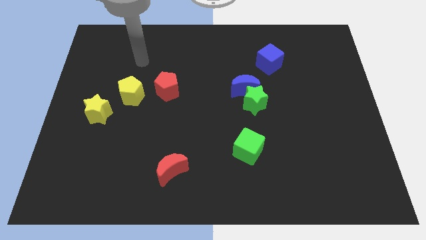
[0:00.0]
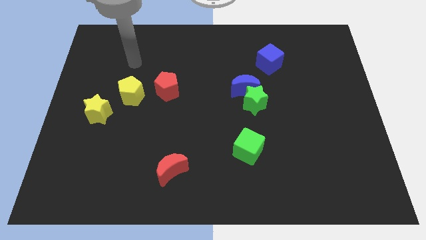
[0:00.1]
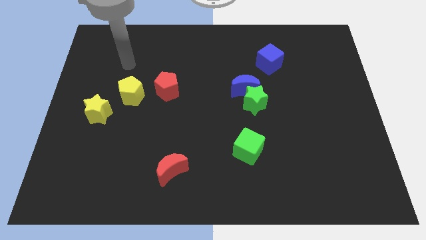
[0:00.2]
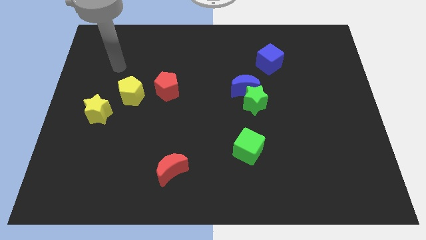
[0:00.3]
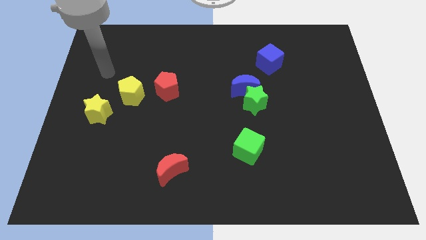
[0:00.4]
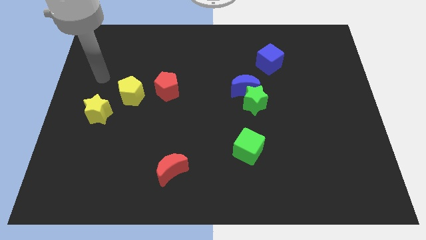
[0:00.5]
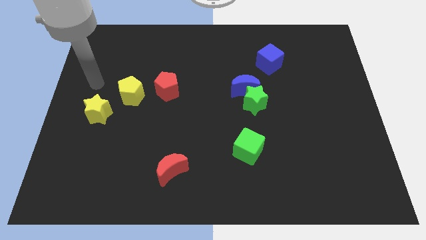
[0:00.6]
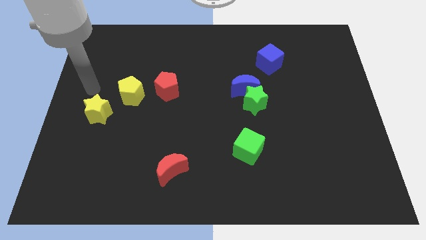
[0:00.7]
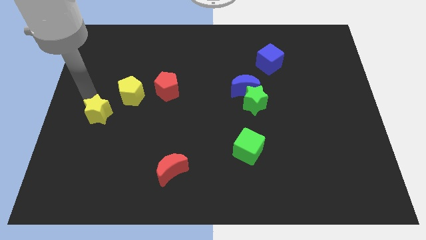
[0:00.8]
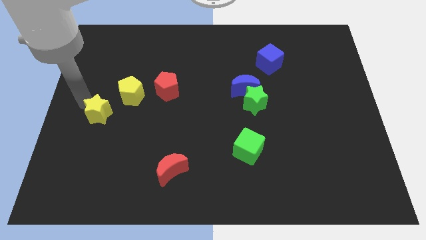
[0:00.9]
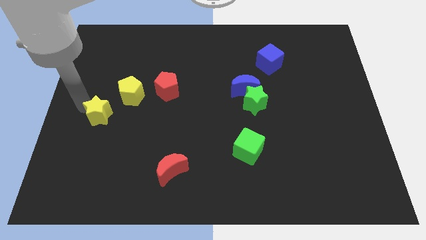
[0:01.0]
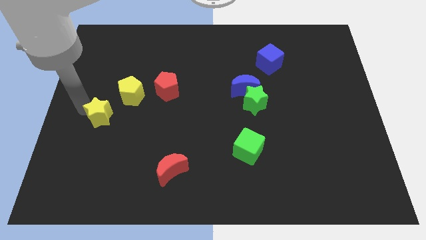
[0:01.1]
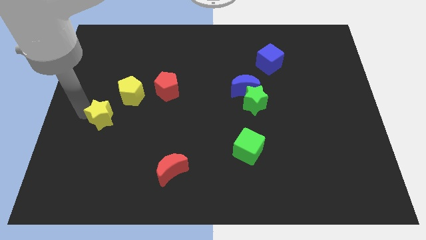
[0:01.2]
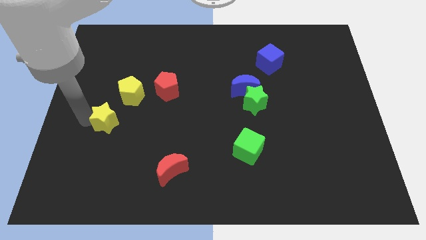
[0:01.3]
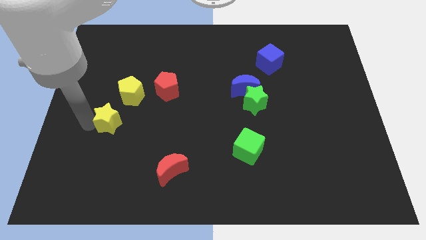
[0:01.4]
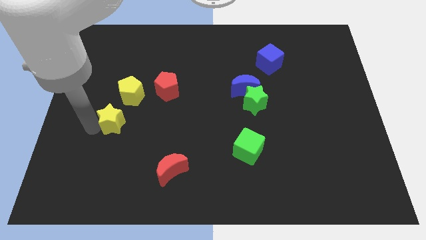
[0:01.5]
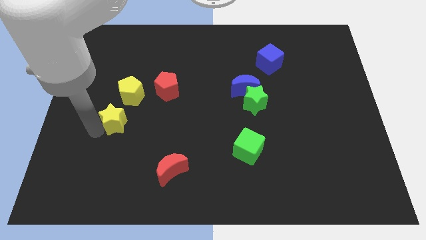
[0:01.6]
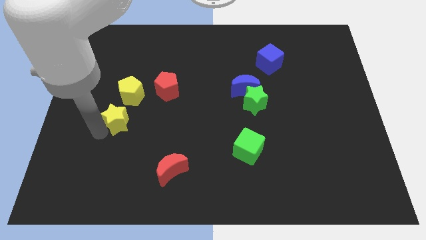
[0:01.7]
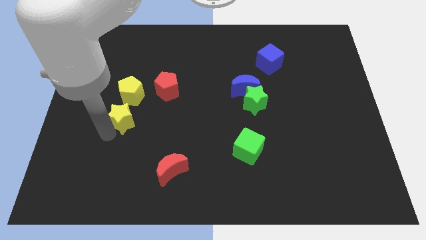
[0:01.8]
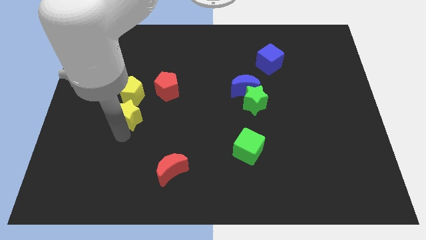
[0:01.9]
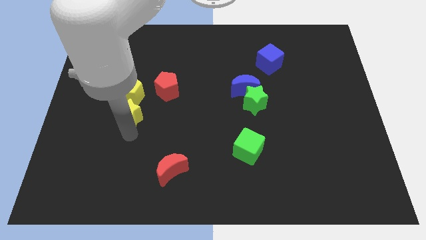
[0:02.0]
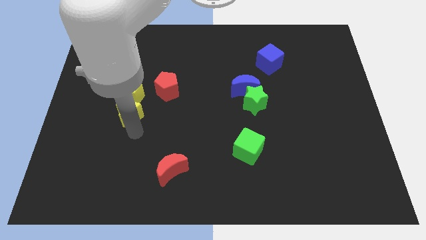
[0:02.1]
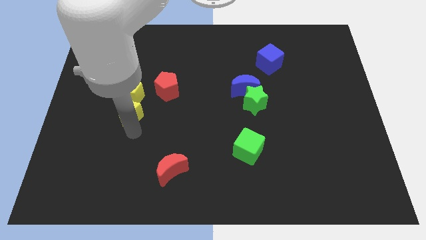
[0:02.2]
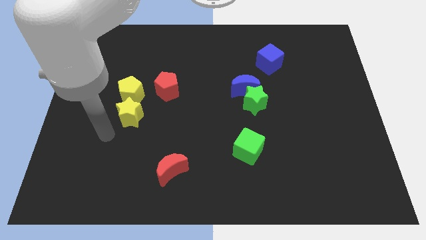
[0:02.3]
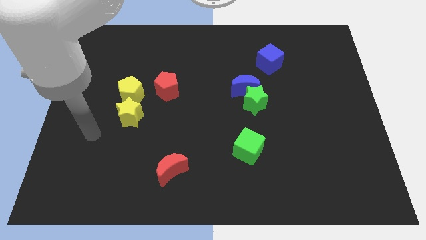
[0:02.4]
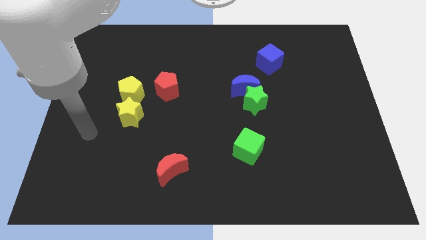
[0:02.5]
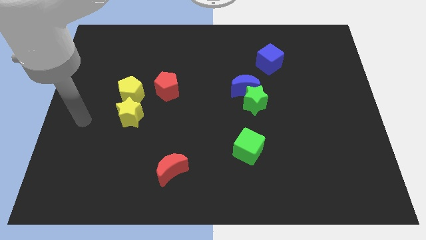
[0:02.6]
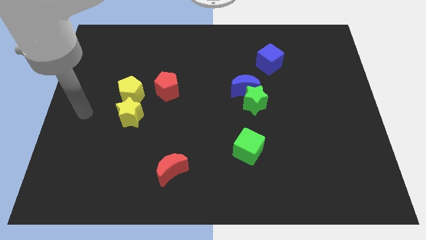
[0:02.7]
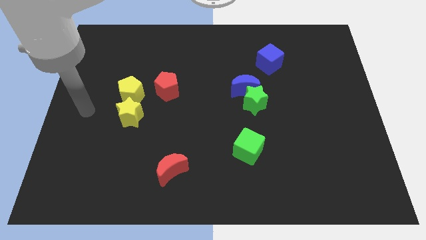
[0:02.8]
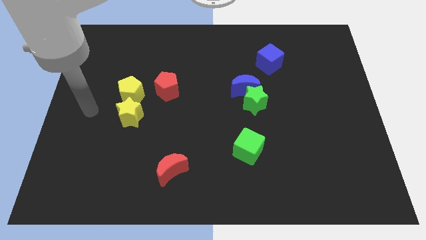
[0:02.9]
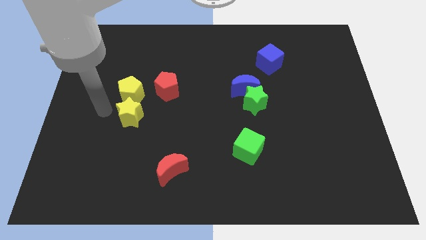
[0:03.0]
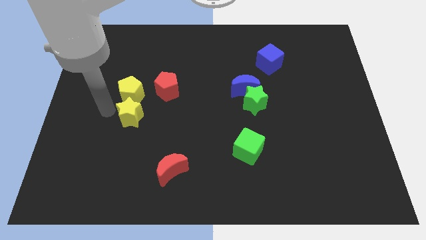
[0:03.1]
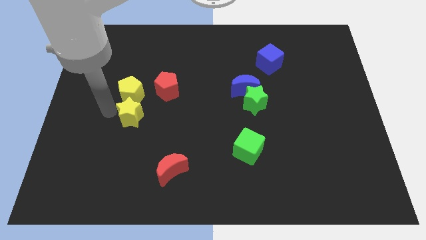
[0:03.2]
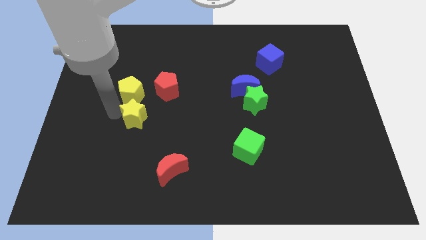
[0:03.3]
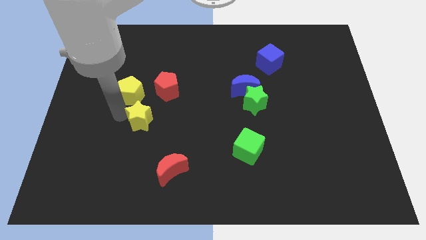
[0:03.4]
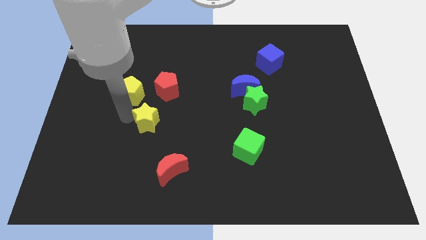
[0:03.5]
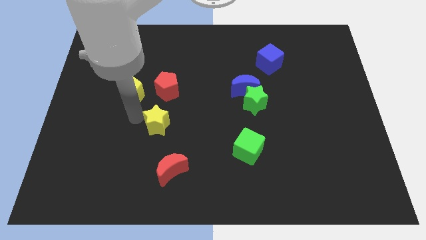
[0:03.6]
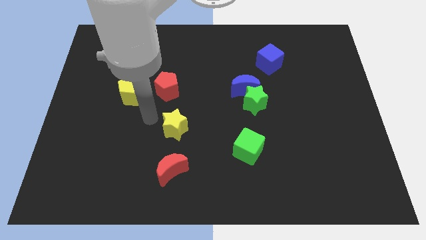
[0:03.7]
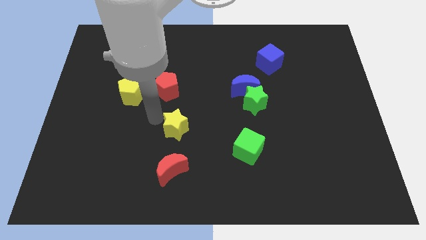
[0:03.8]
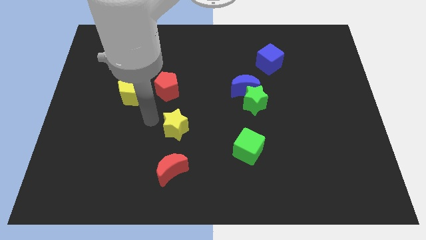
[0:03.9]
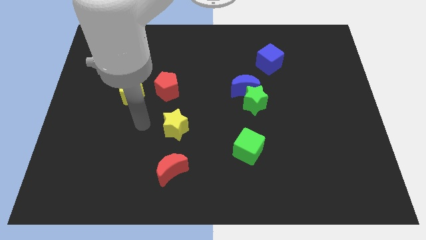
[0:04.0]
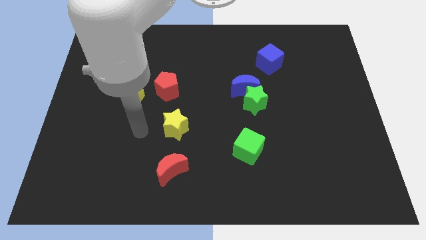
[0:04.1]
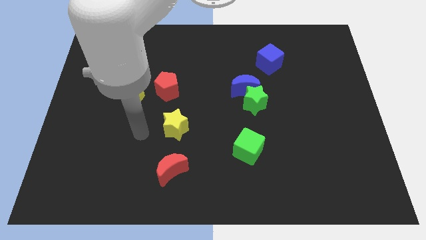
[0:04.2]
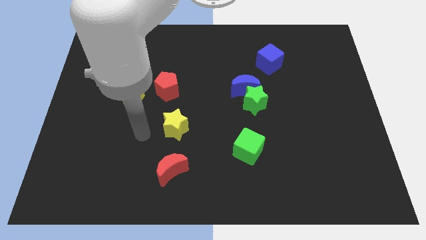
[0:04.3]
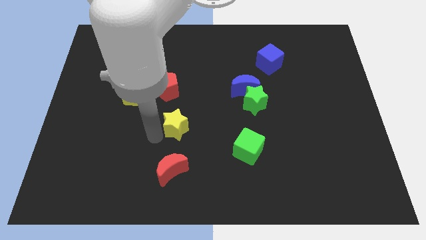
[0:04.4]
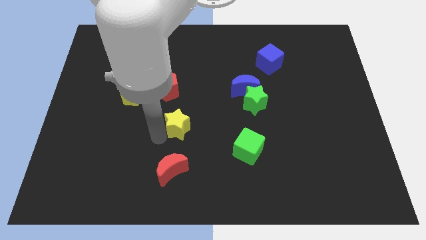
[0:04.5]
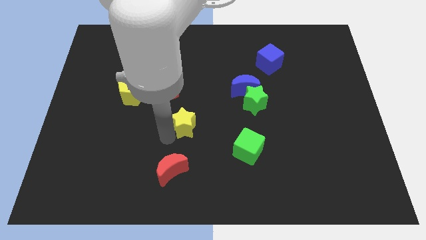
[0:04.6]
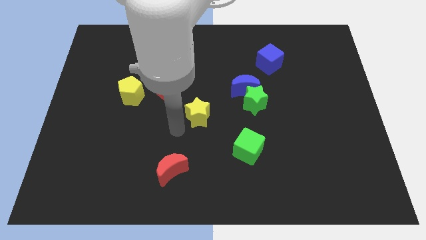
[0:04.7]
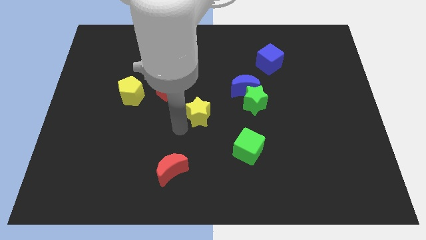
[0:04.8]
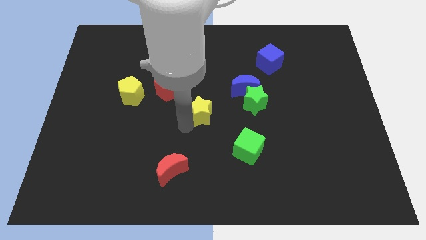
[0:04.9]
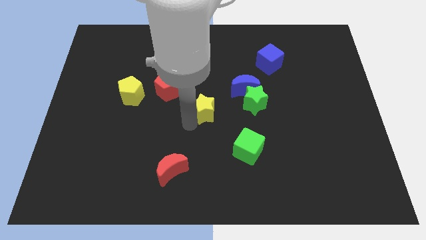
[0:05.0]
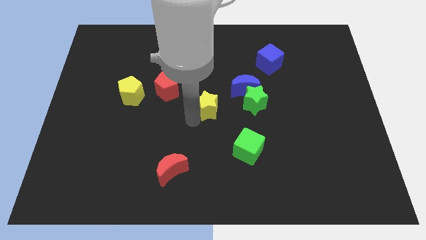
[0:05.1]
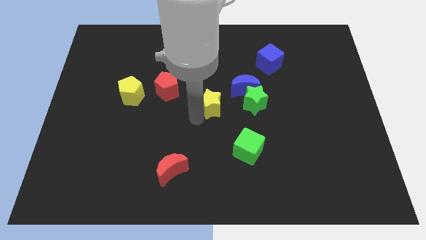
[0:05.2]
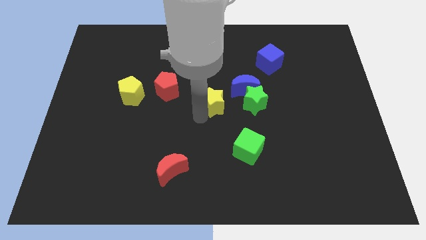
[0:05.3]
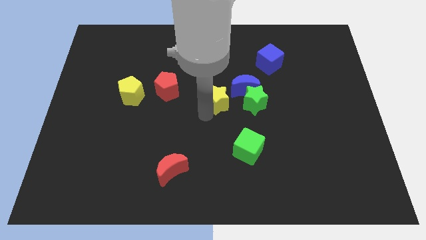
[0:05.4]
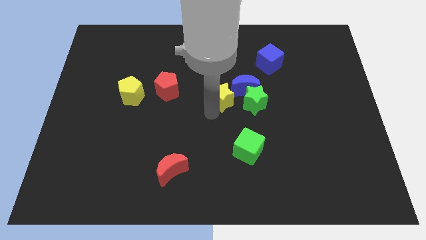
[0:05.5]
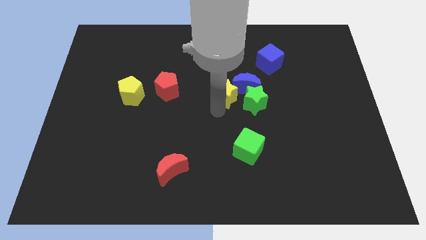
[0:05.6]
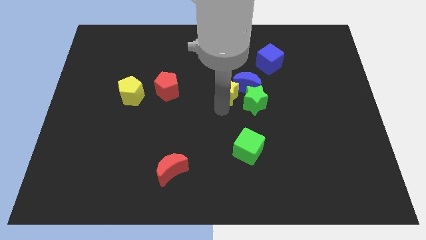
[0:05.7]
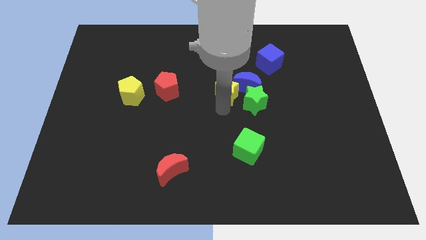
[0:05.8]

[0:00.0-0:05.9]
move the yellow star towards the blue moon

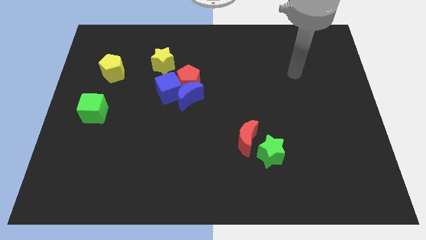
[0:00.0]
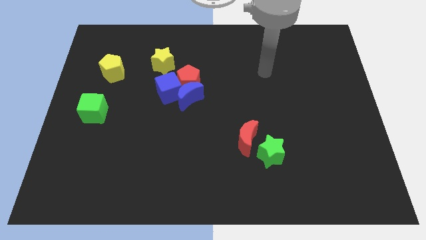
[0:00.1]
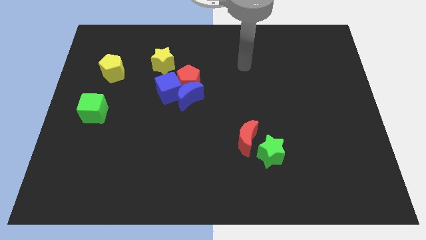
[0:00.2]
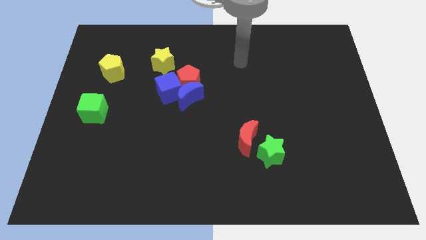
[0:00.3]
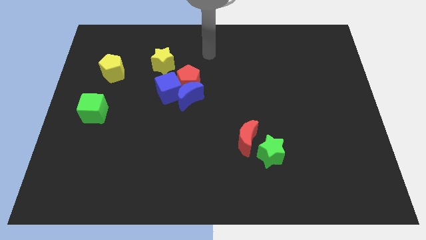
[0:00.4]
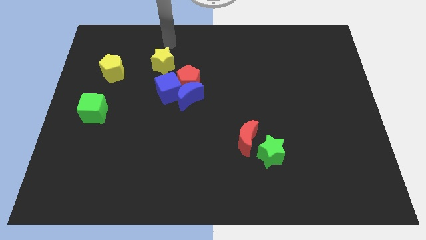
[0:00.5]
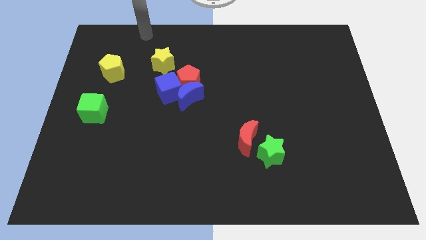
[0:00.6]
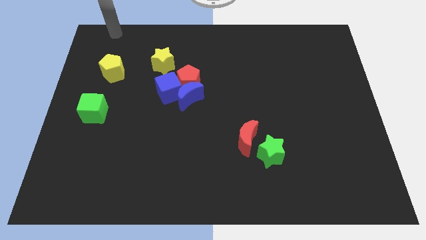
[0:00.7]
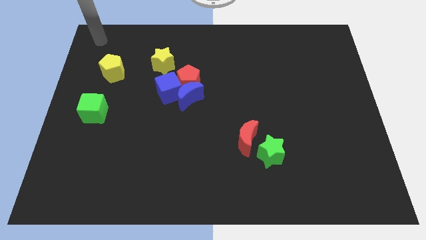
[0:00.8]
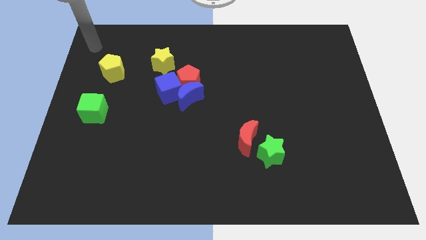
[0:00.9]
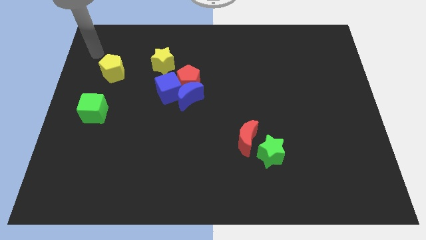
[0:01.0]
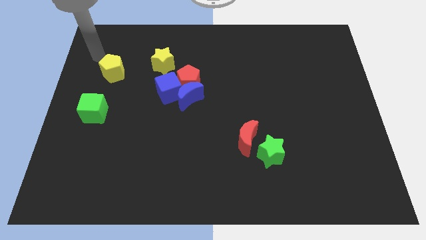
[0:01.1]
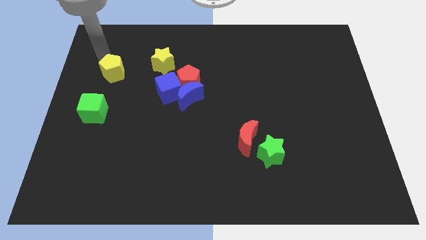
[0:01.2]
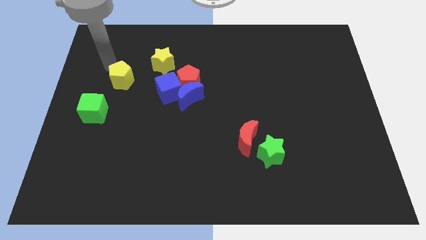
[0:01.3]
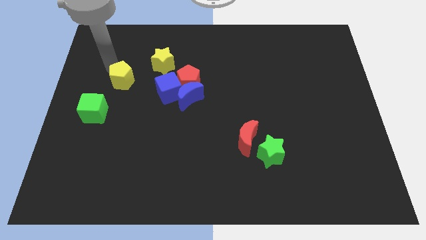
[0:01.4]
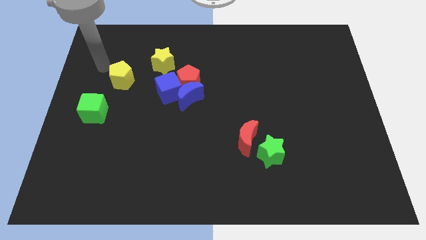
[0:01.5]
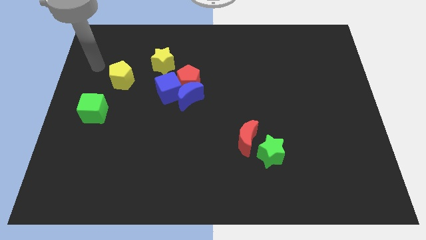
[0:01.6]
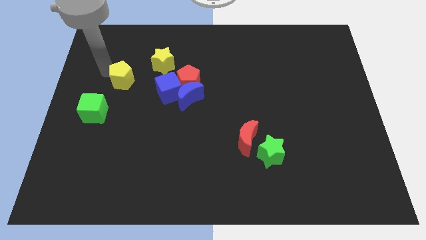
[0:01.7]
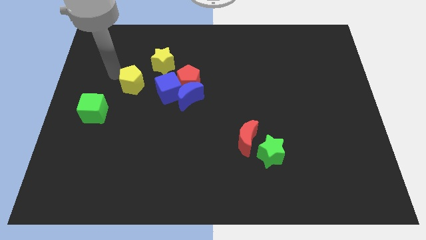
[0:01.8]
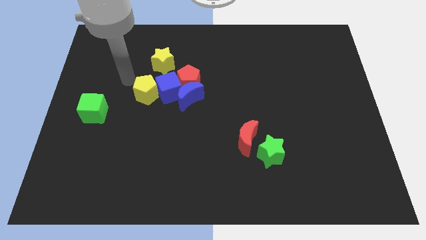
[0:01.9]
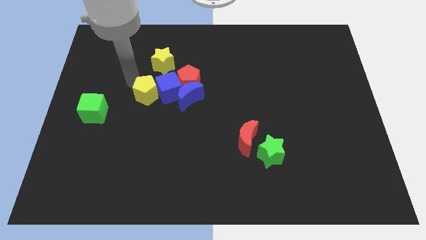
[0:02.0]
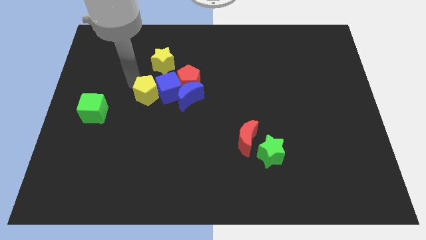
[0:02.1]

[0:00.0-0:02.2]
put the yellow pentagon towards the blue cube
